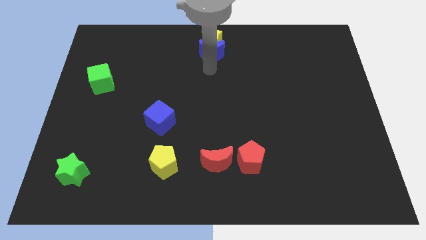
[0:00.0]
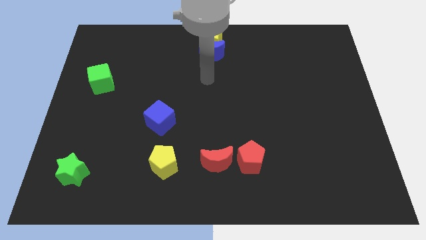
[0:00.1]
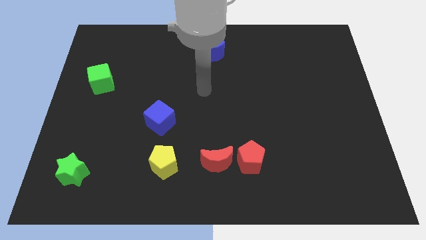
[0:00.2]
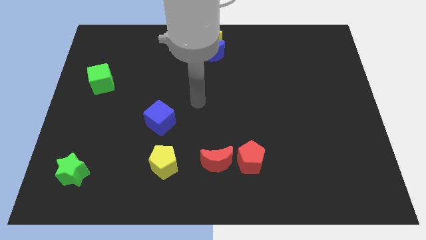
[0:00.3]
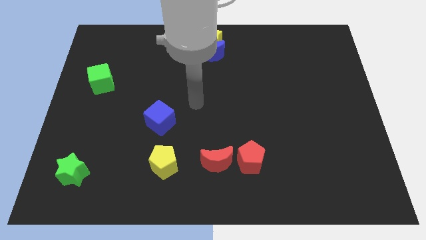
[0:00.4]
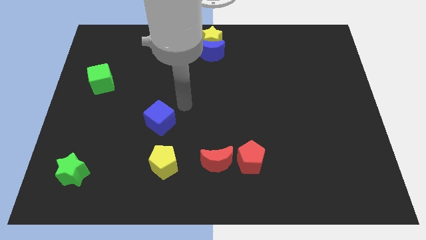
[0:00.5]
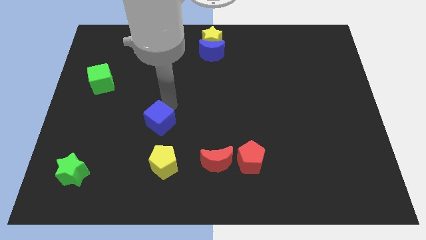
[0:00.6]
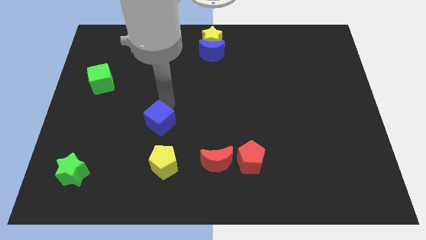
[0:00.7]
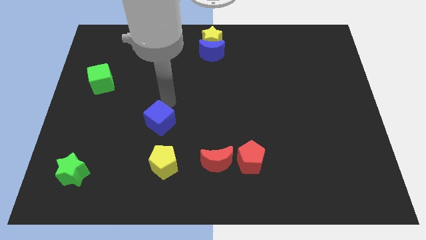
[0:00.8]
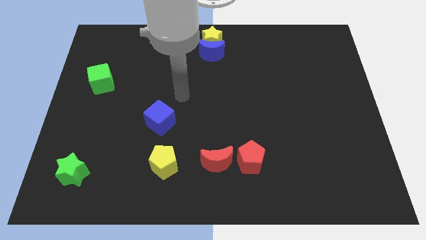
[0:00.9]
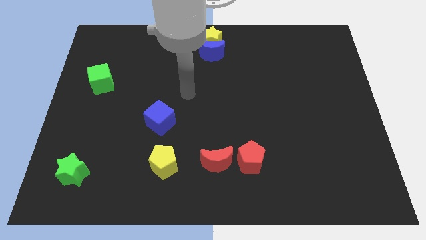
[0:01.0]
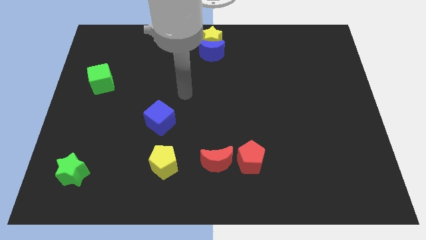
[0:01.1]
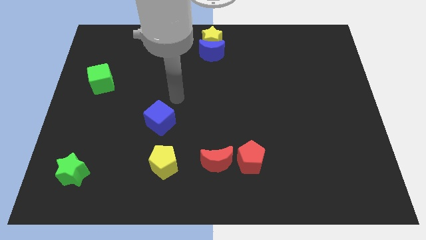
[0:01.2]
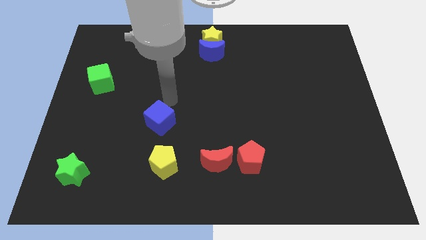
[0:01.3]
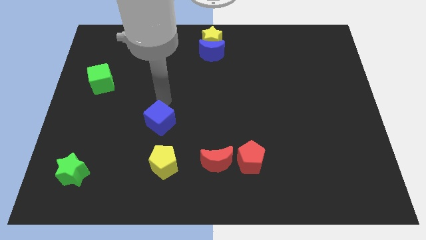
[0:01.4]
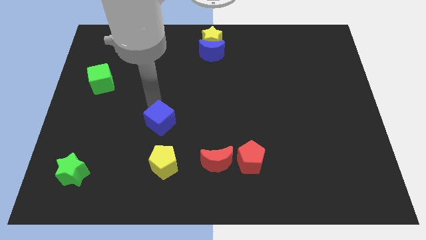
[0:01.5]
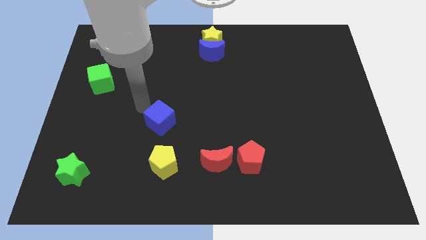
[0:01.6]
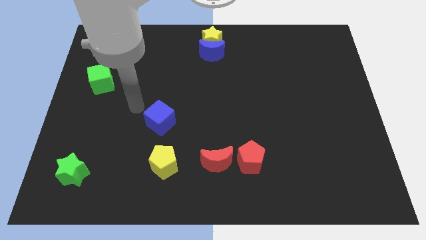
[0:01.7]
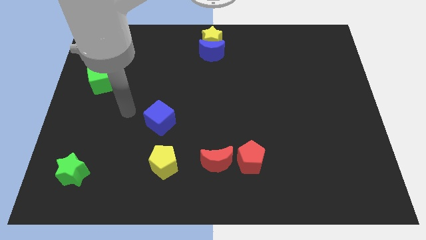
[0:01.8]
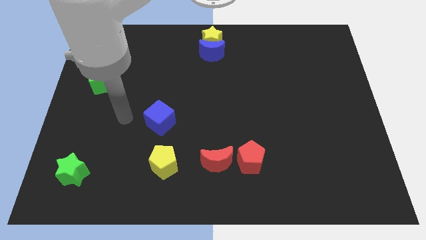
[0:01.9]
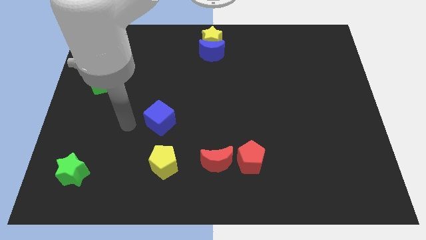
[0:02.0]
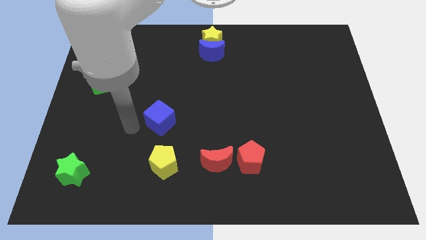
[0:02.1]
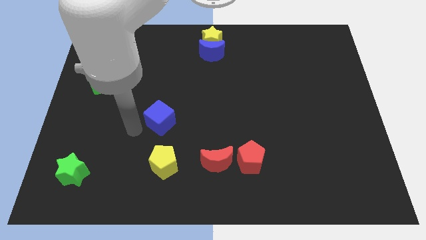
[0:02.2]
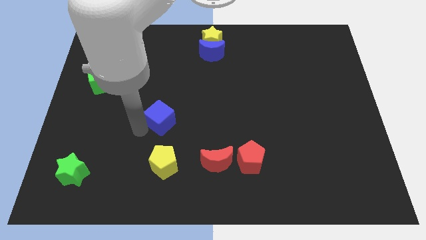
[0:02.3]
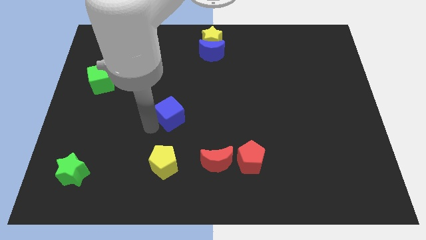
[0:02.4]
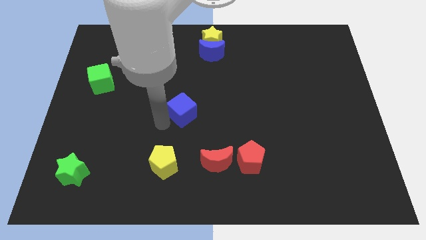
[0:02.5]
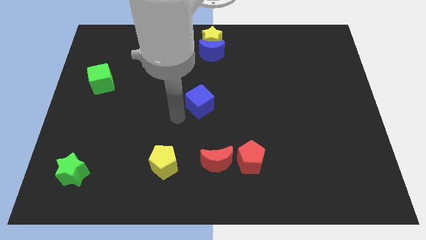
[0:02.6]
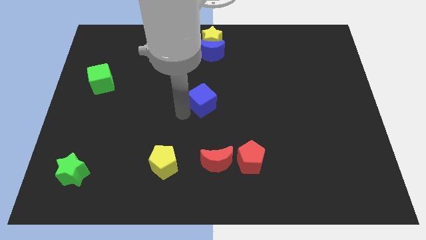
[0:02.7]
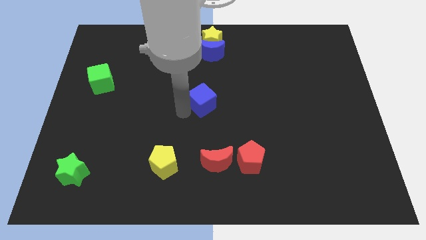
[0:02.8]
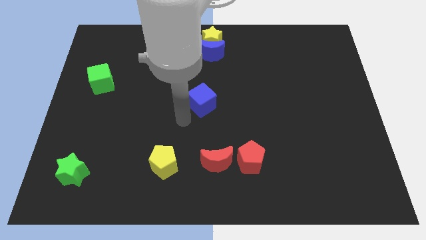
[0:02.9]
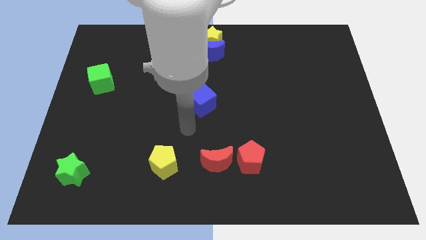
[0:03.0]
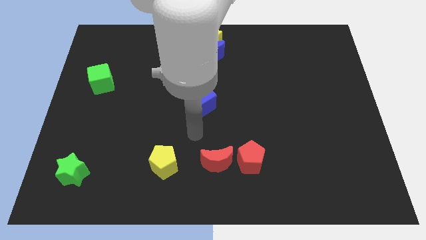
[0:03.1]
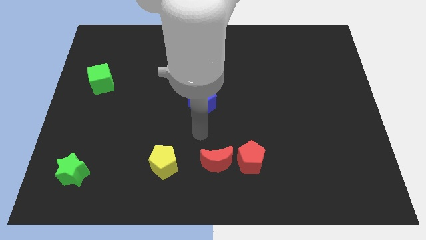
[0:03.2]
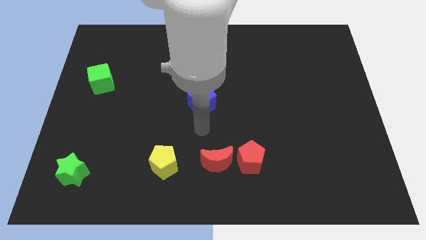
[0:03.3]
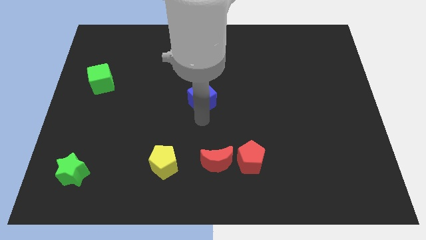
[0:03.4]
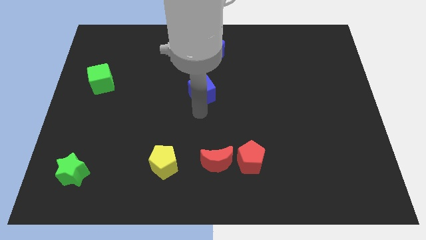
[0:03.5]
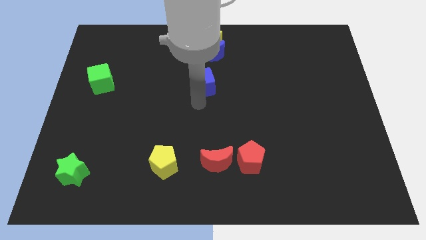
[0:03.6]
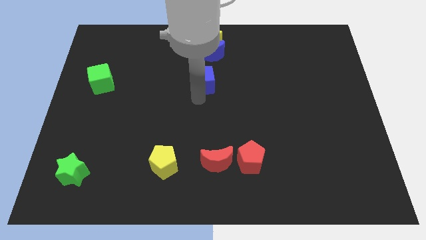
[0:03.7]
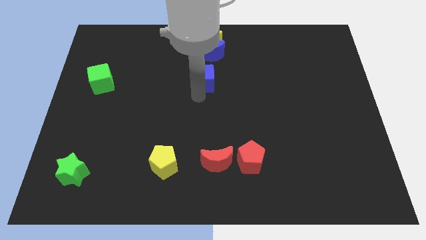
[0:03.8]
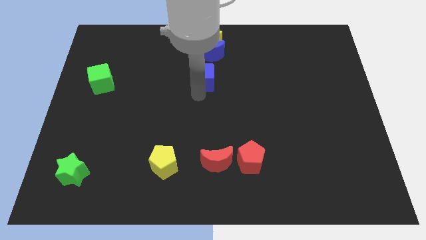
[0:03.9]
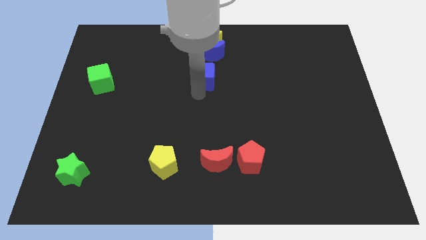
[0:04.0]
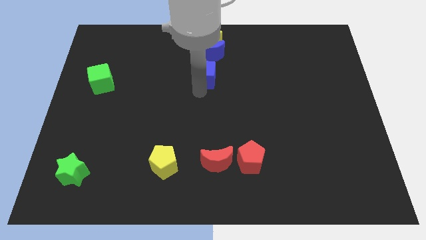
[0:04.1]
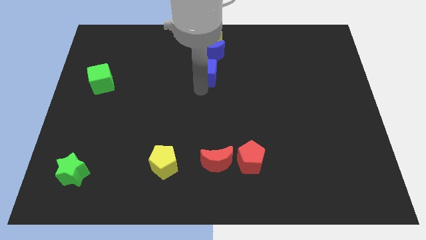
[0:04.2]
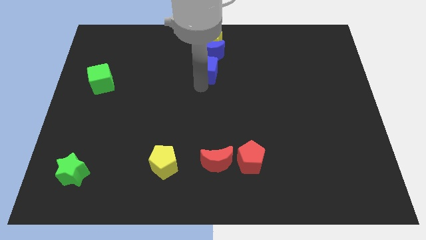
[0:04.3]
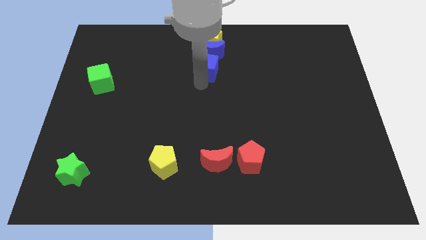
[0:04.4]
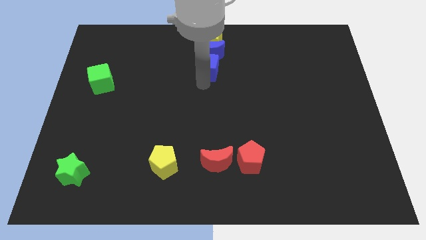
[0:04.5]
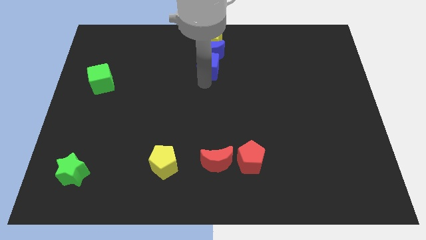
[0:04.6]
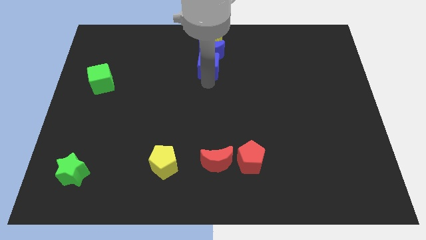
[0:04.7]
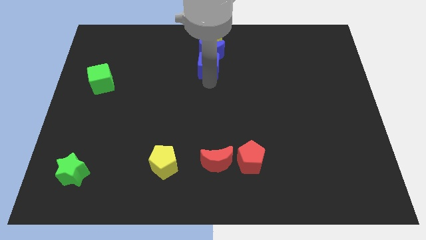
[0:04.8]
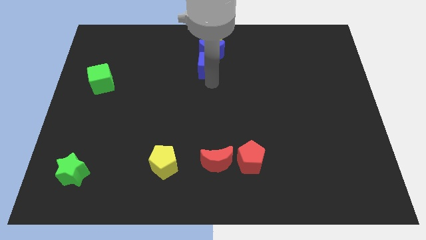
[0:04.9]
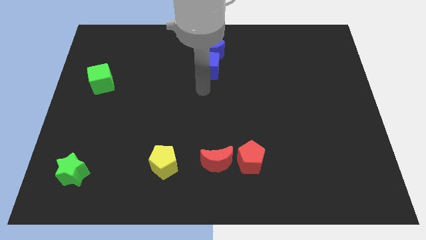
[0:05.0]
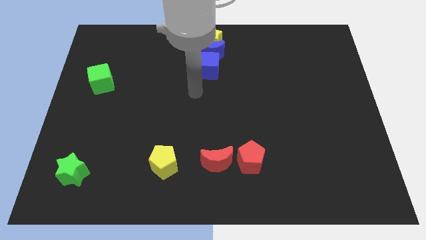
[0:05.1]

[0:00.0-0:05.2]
place the blue cube below the blue moon

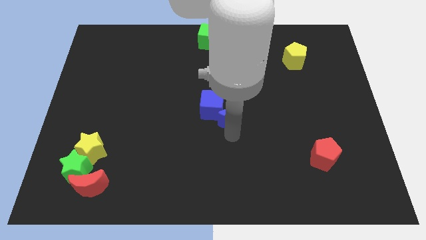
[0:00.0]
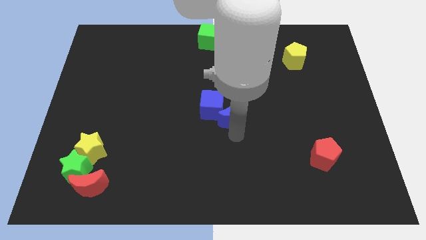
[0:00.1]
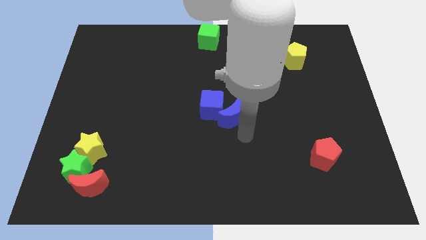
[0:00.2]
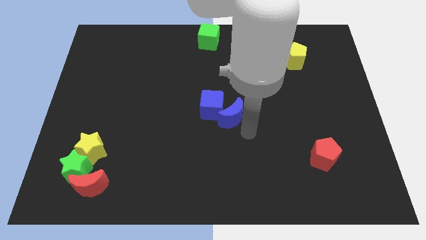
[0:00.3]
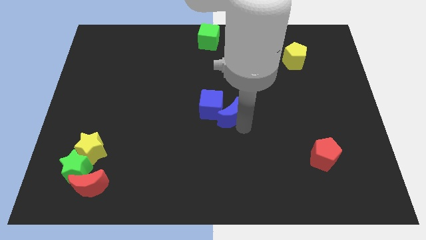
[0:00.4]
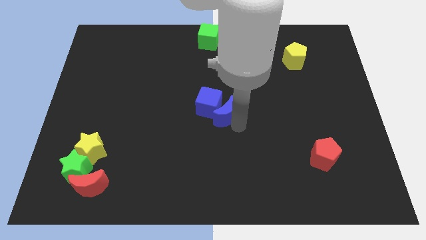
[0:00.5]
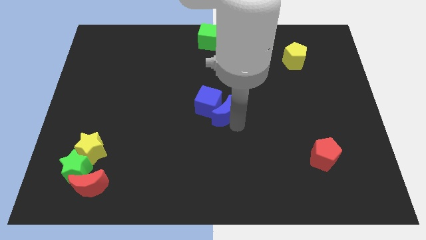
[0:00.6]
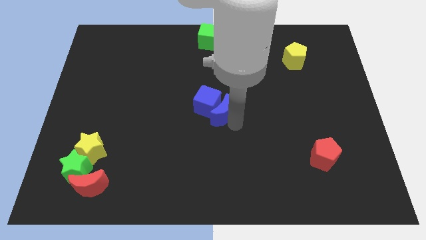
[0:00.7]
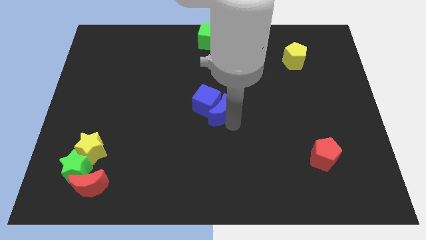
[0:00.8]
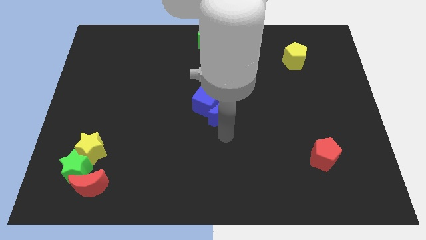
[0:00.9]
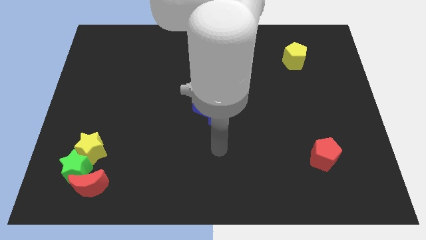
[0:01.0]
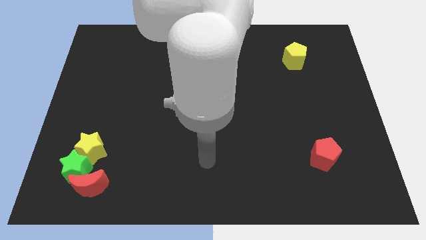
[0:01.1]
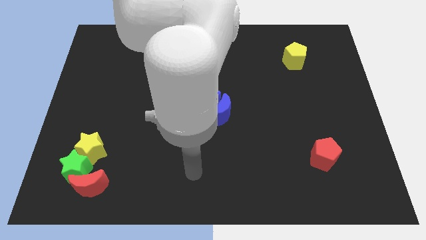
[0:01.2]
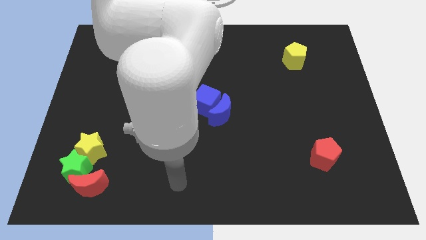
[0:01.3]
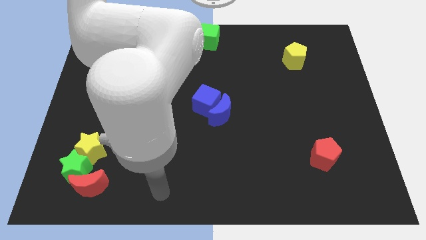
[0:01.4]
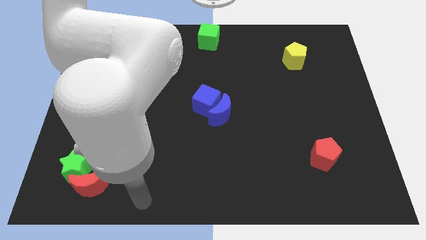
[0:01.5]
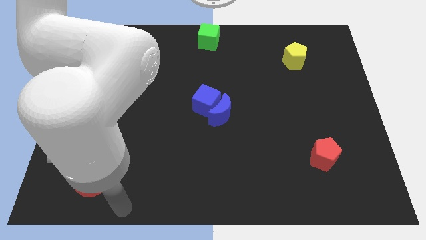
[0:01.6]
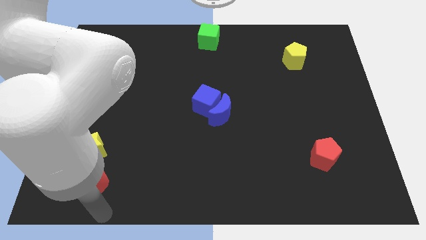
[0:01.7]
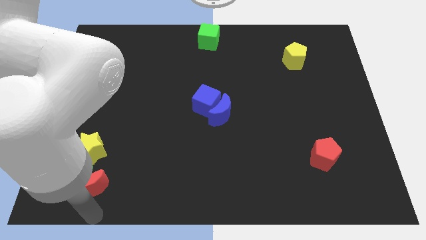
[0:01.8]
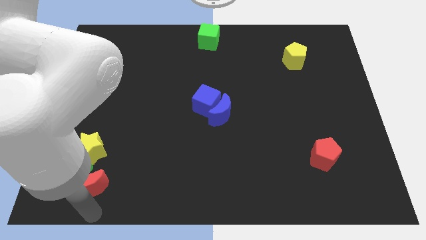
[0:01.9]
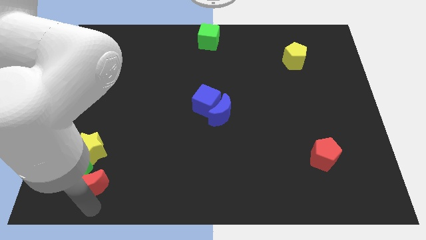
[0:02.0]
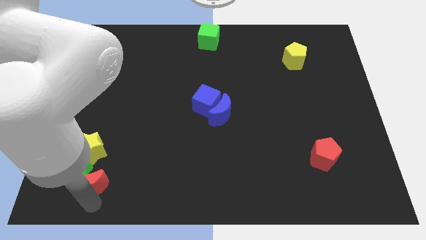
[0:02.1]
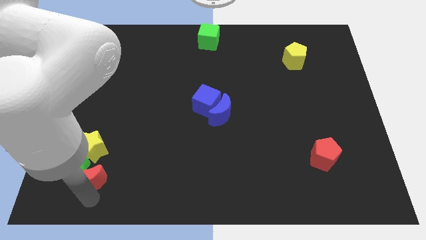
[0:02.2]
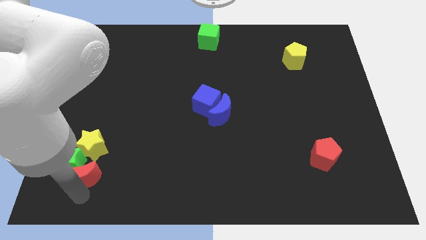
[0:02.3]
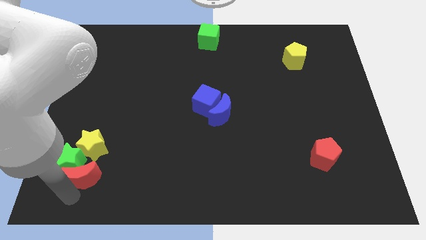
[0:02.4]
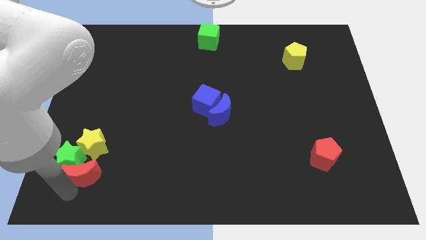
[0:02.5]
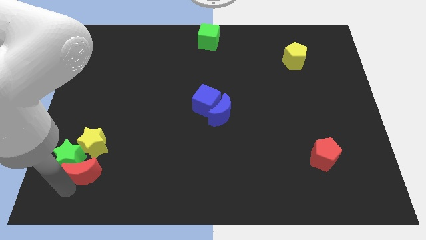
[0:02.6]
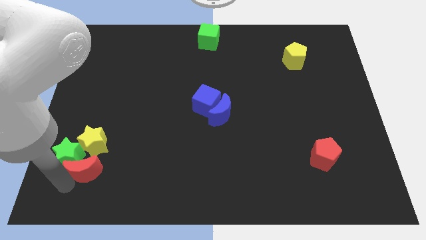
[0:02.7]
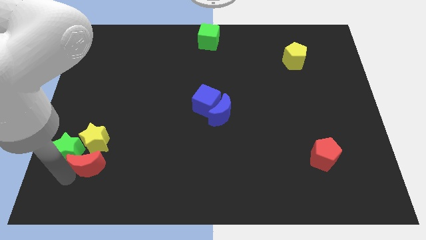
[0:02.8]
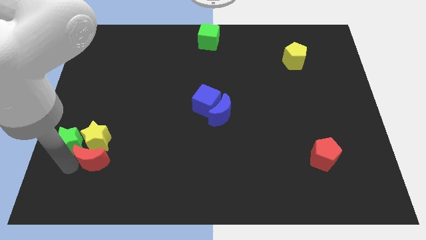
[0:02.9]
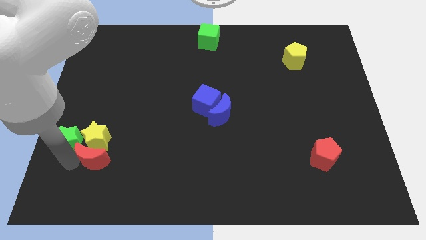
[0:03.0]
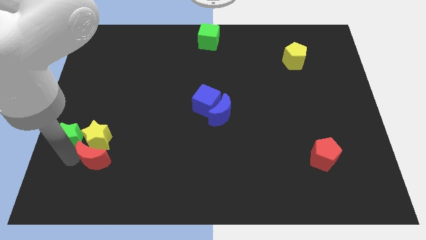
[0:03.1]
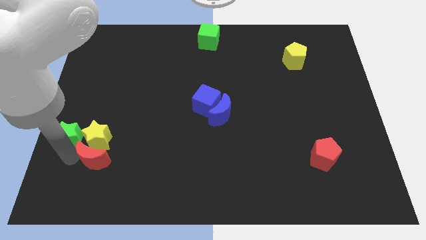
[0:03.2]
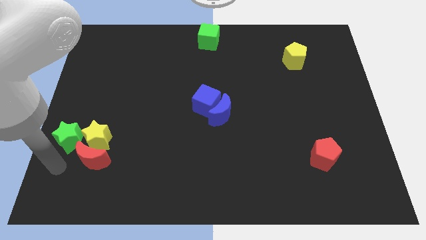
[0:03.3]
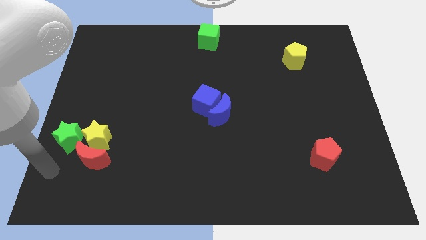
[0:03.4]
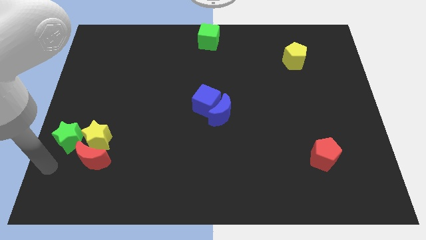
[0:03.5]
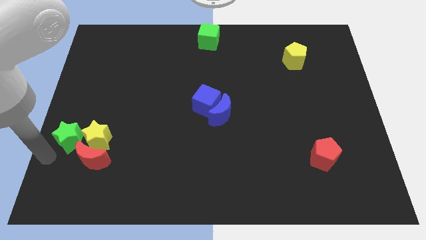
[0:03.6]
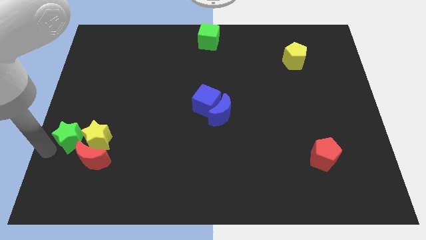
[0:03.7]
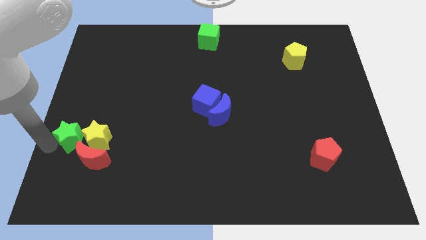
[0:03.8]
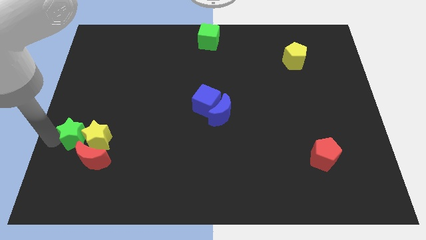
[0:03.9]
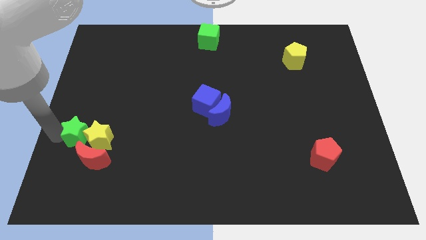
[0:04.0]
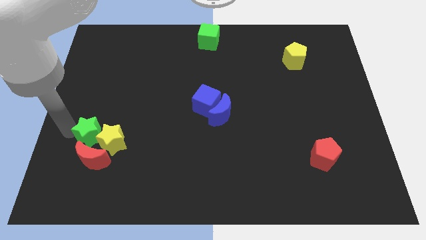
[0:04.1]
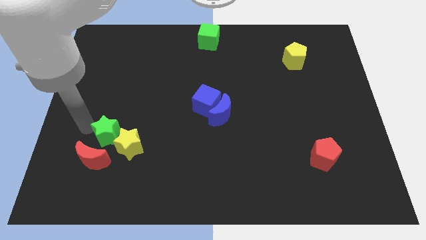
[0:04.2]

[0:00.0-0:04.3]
move the green star to the left of yellow star
